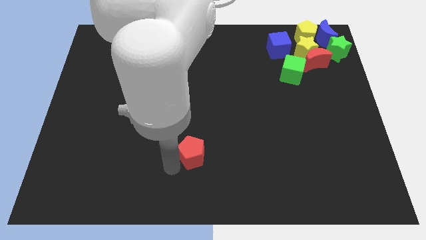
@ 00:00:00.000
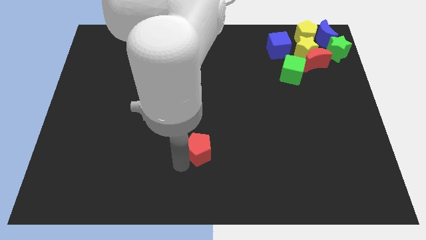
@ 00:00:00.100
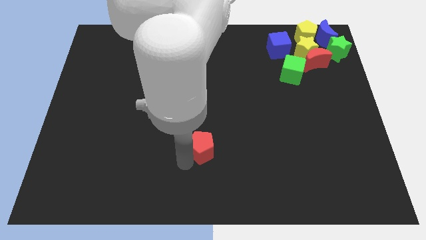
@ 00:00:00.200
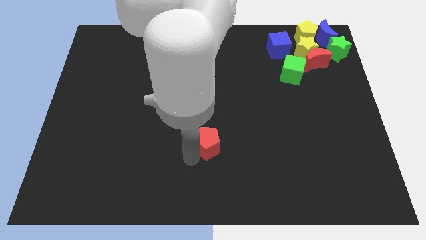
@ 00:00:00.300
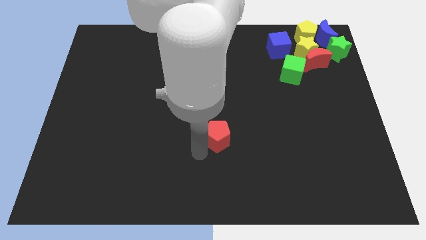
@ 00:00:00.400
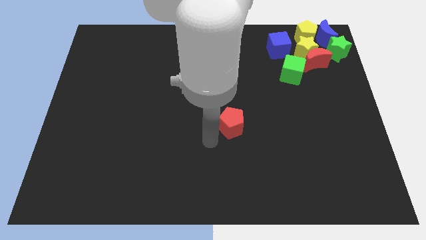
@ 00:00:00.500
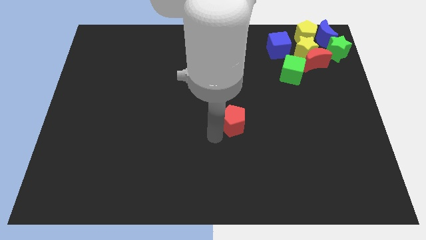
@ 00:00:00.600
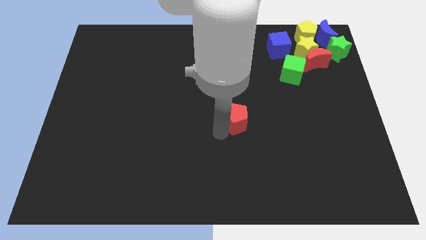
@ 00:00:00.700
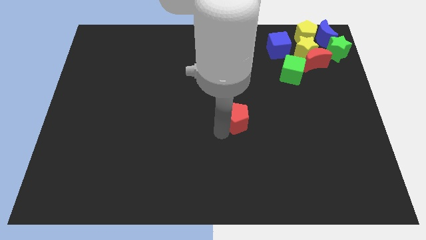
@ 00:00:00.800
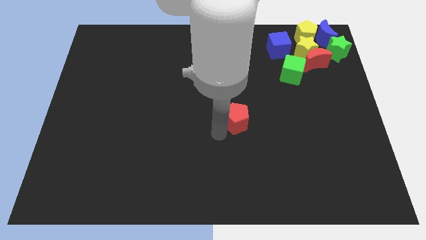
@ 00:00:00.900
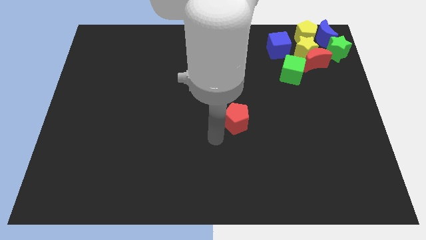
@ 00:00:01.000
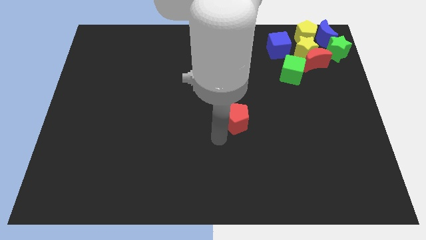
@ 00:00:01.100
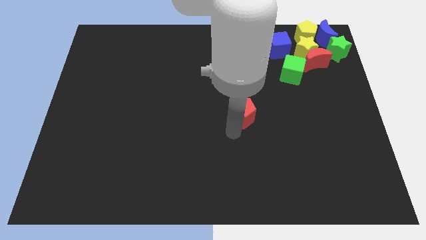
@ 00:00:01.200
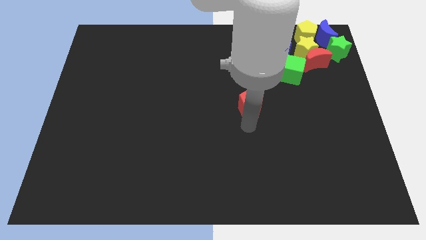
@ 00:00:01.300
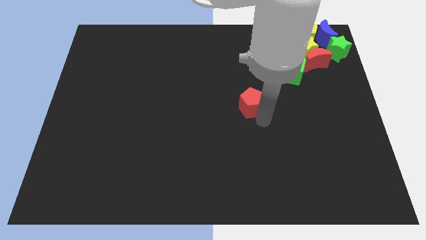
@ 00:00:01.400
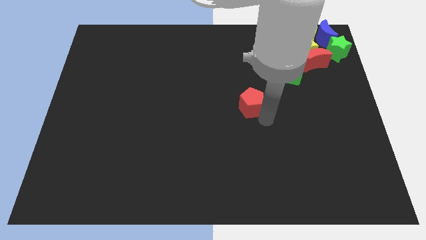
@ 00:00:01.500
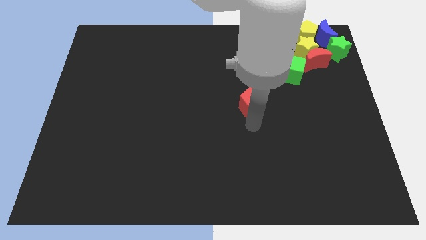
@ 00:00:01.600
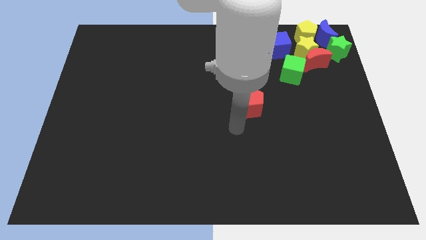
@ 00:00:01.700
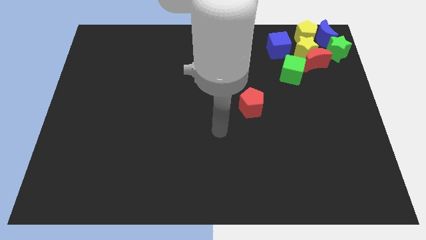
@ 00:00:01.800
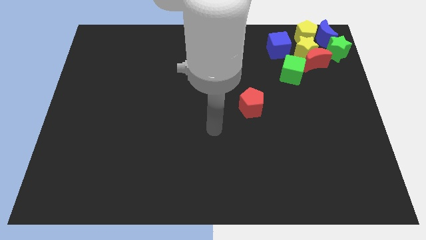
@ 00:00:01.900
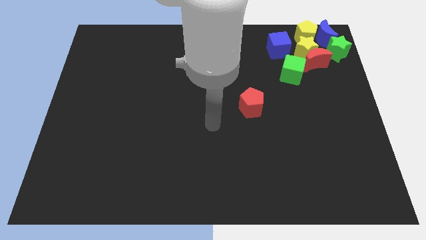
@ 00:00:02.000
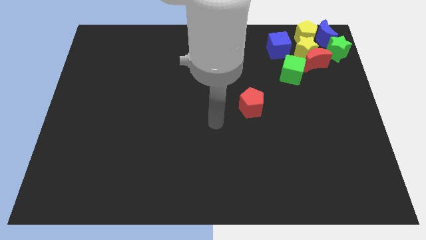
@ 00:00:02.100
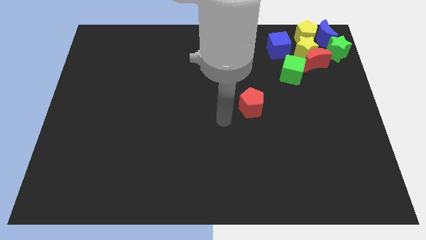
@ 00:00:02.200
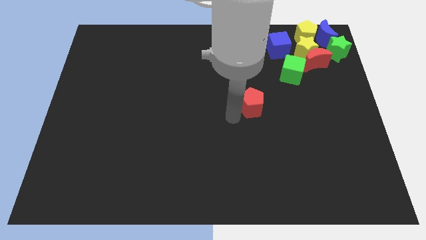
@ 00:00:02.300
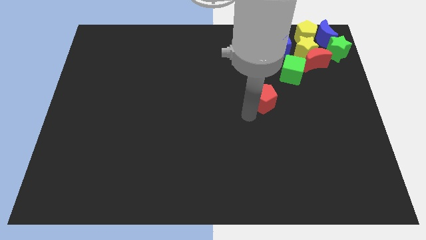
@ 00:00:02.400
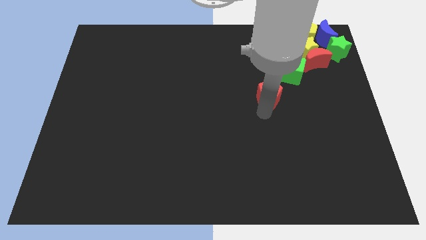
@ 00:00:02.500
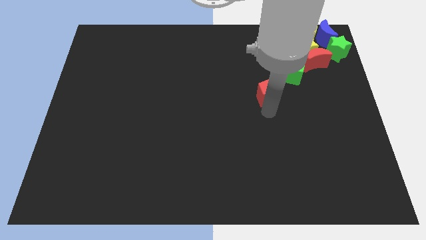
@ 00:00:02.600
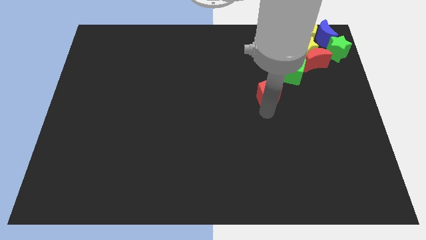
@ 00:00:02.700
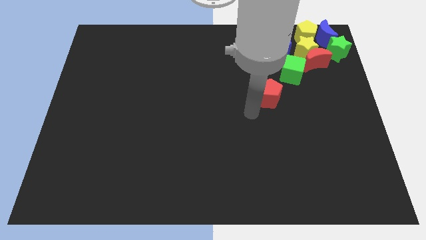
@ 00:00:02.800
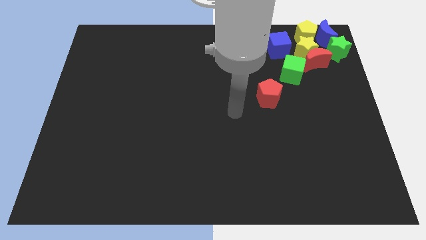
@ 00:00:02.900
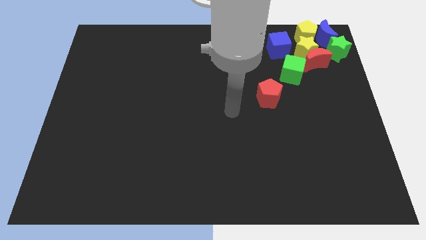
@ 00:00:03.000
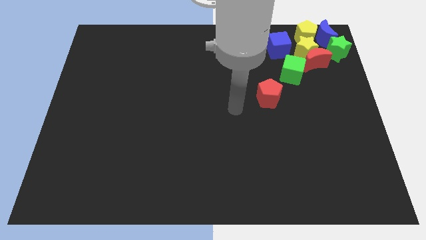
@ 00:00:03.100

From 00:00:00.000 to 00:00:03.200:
move the red pentagon slightly towards the green cube

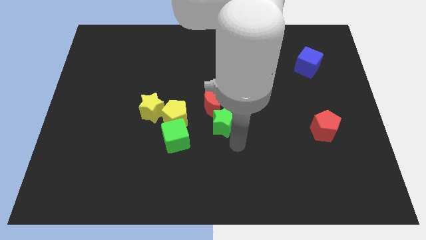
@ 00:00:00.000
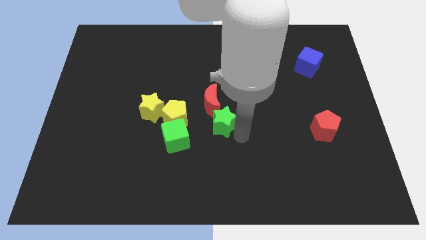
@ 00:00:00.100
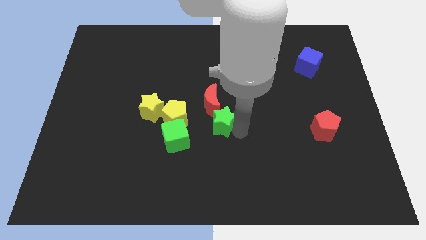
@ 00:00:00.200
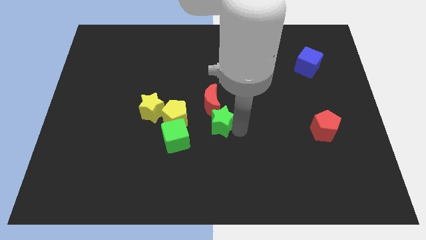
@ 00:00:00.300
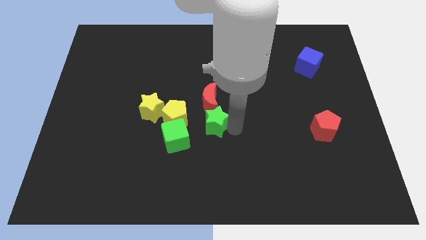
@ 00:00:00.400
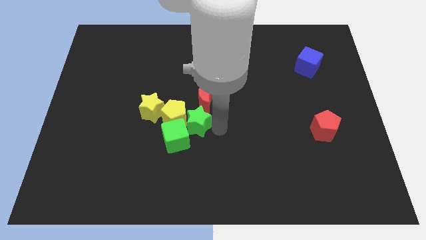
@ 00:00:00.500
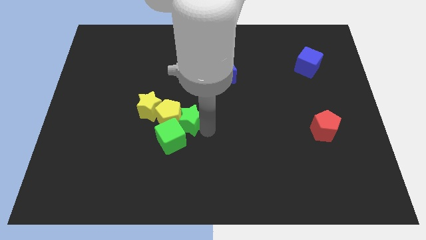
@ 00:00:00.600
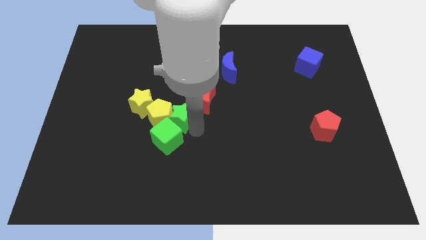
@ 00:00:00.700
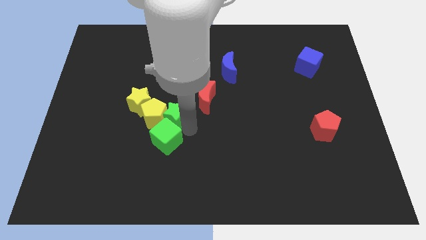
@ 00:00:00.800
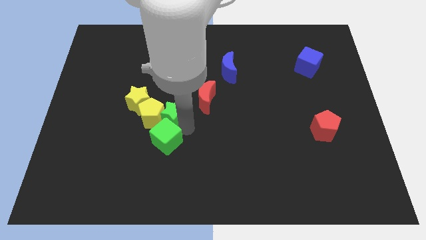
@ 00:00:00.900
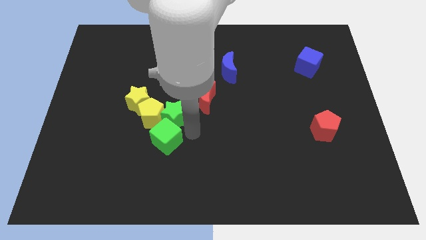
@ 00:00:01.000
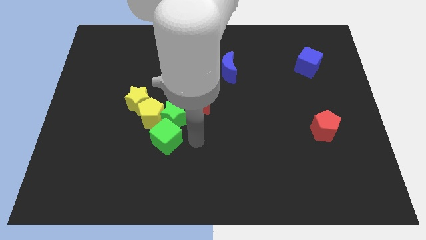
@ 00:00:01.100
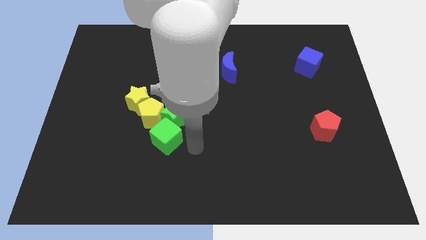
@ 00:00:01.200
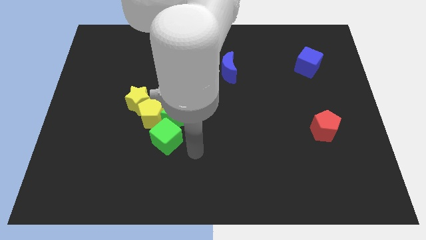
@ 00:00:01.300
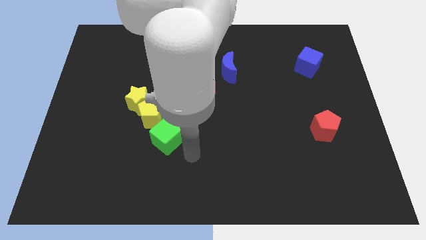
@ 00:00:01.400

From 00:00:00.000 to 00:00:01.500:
push the green star into the yellow pentagon

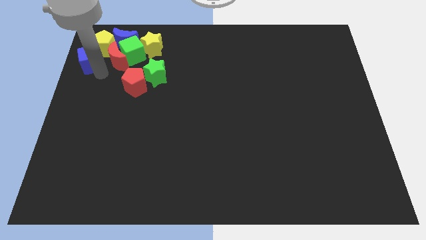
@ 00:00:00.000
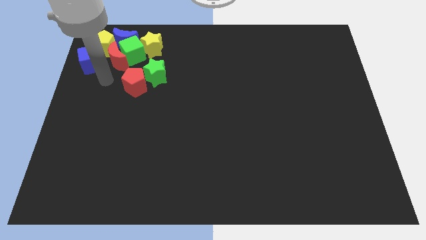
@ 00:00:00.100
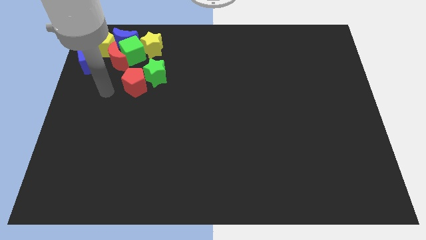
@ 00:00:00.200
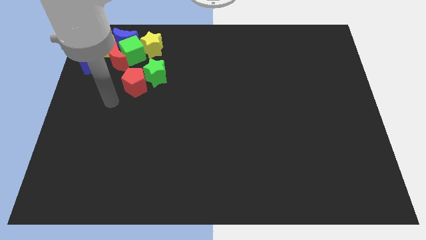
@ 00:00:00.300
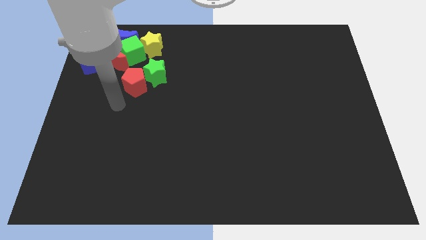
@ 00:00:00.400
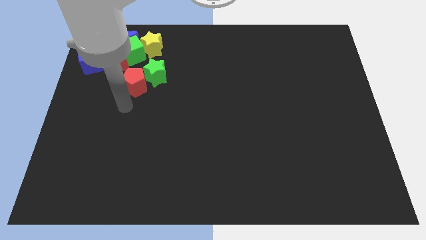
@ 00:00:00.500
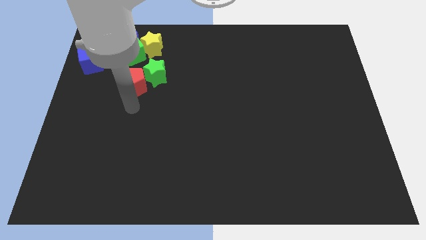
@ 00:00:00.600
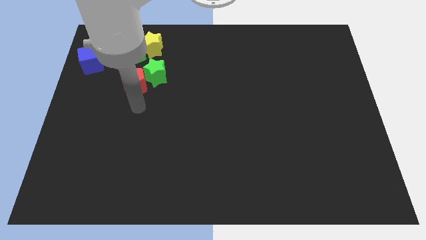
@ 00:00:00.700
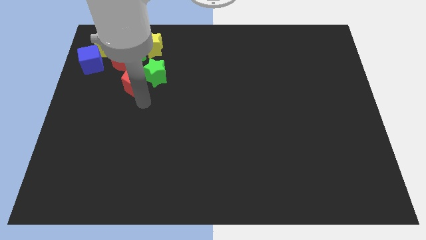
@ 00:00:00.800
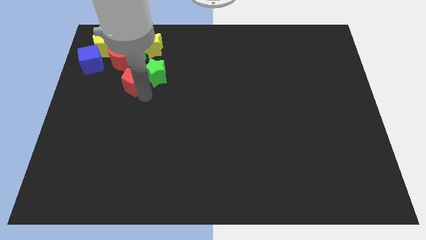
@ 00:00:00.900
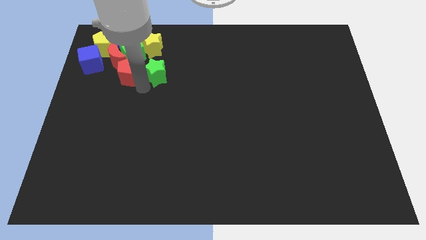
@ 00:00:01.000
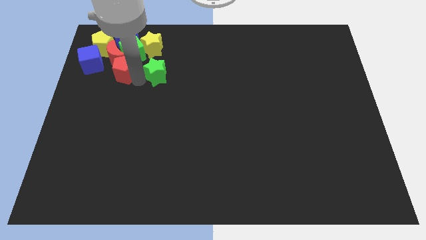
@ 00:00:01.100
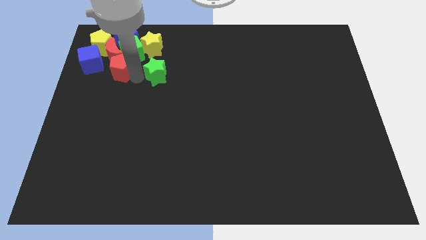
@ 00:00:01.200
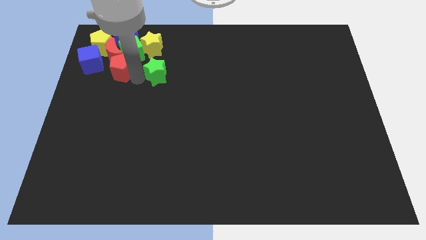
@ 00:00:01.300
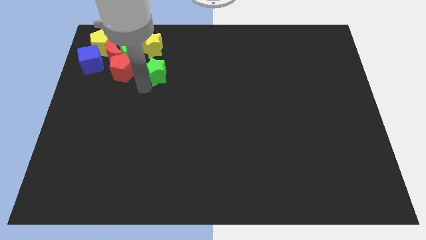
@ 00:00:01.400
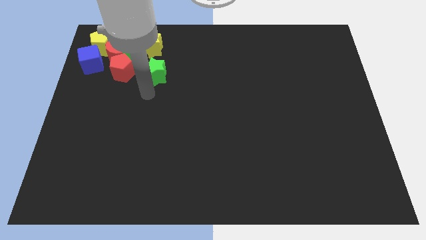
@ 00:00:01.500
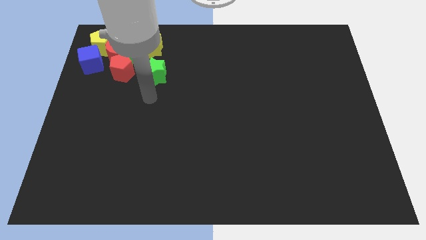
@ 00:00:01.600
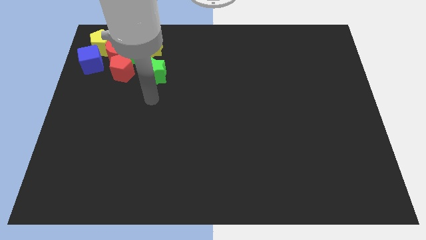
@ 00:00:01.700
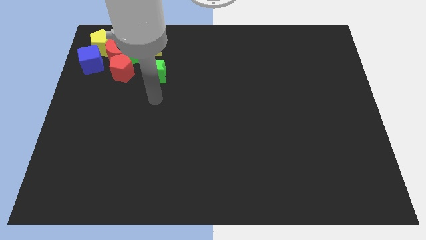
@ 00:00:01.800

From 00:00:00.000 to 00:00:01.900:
push the red pentagon into red moon at the bottom

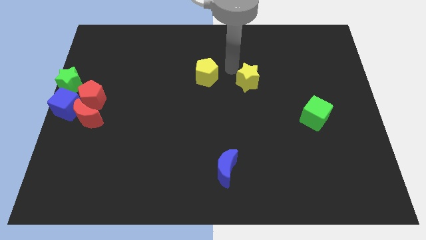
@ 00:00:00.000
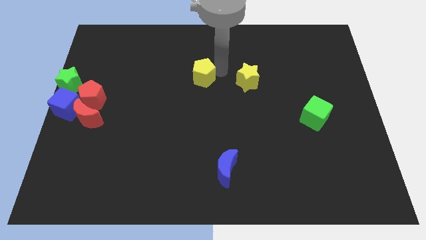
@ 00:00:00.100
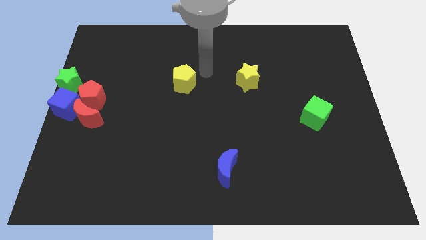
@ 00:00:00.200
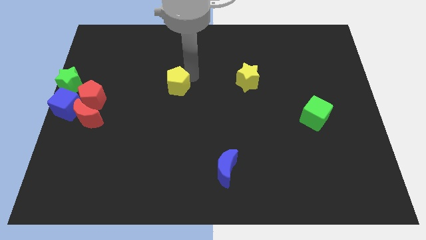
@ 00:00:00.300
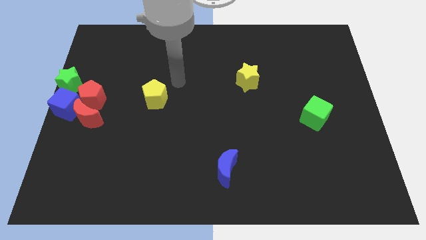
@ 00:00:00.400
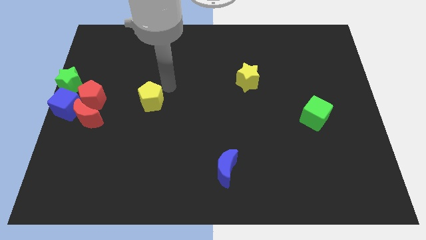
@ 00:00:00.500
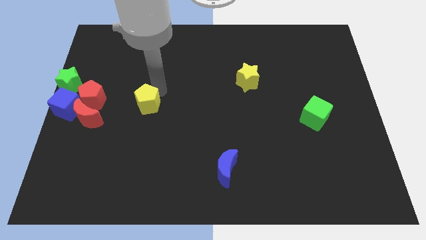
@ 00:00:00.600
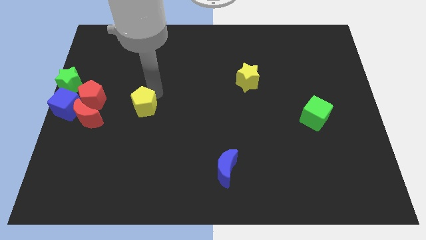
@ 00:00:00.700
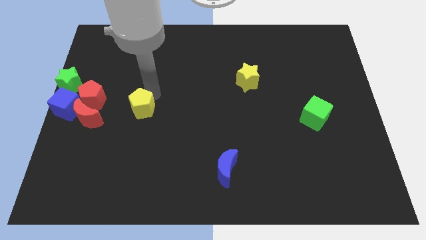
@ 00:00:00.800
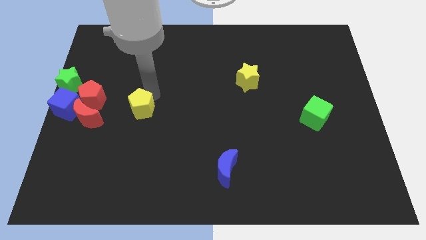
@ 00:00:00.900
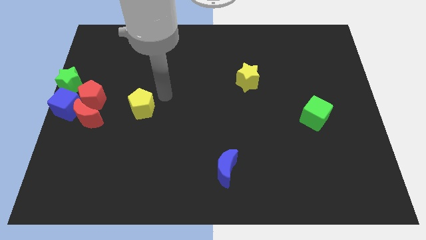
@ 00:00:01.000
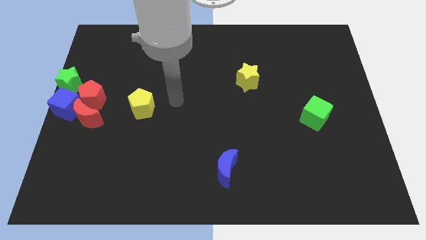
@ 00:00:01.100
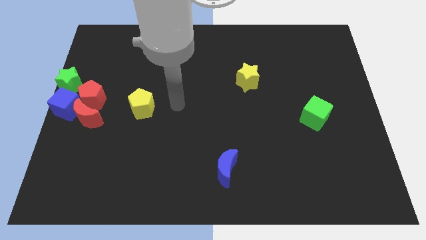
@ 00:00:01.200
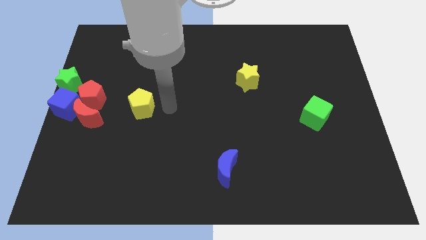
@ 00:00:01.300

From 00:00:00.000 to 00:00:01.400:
place yellow pentagon to the right of the red pentagon

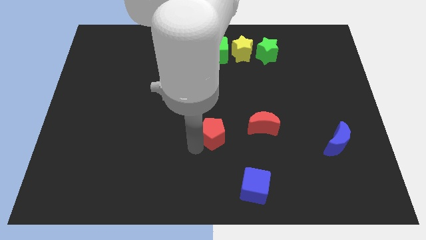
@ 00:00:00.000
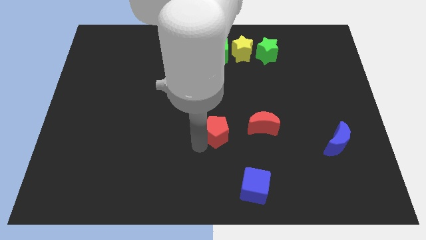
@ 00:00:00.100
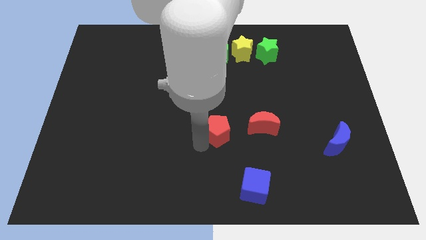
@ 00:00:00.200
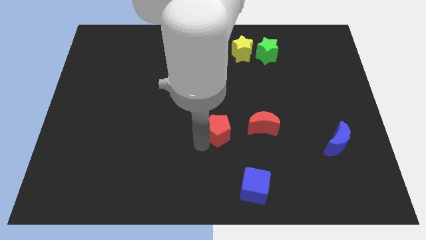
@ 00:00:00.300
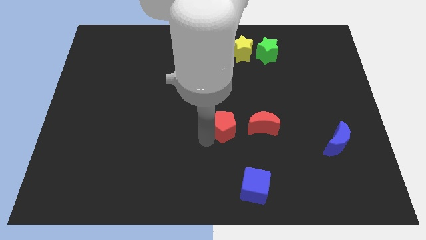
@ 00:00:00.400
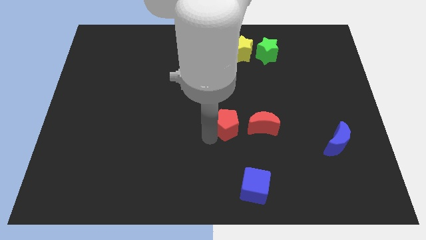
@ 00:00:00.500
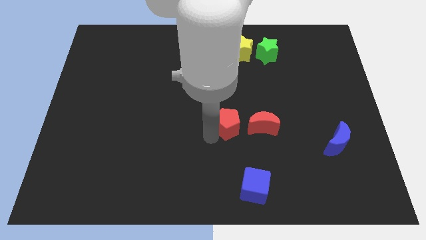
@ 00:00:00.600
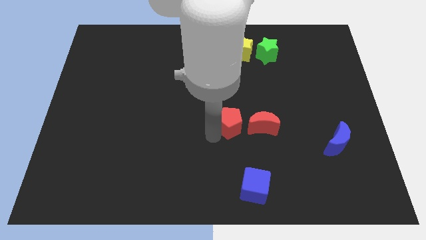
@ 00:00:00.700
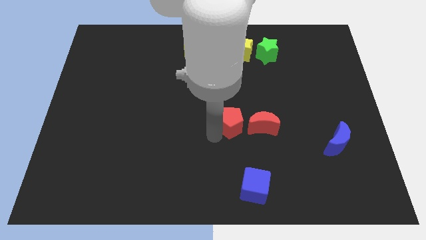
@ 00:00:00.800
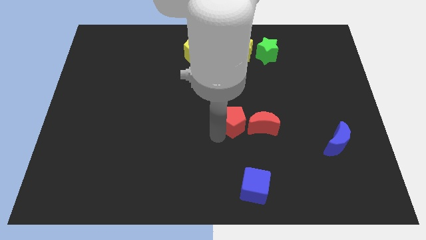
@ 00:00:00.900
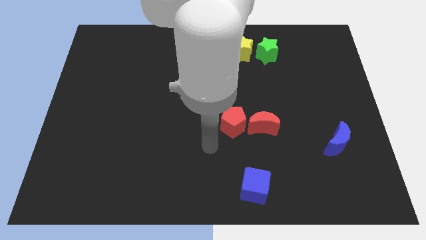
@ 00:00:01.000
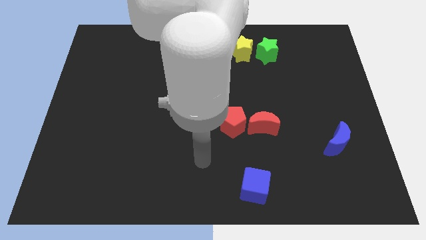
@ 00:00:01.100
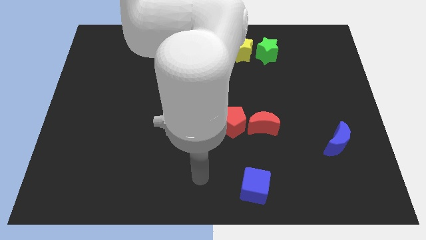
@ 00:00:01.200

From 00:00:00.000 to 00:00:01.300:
move the red pentagon close to the red moon
